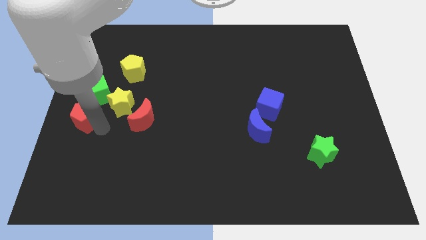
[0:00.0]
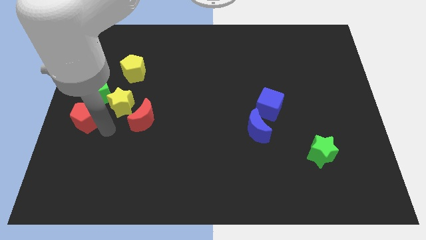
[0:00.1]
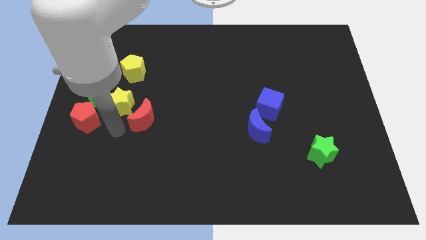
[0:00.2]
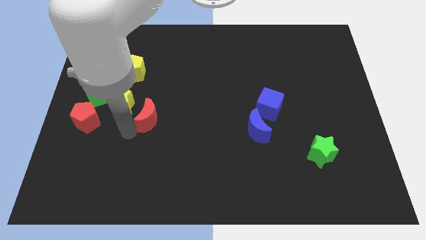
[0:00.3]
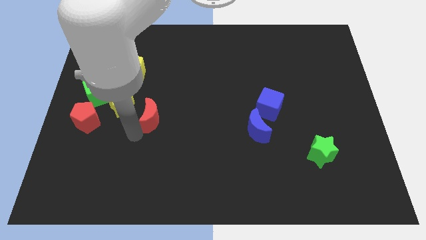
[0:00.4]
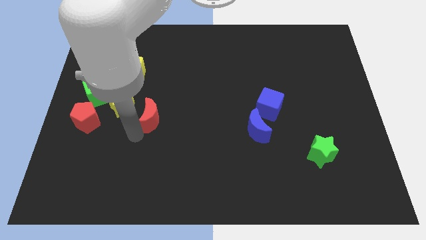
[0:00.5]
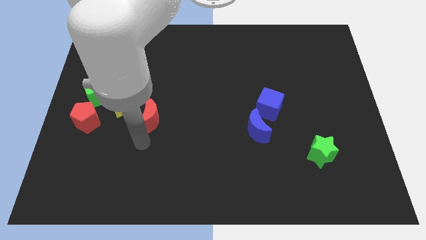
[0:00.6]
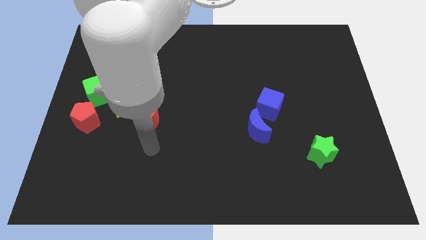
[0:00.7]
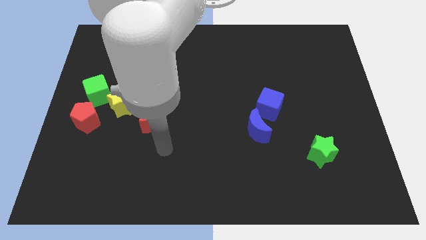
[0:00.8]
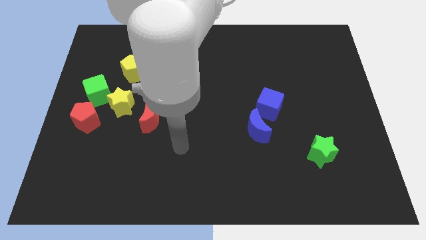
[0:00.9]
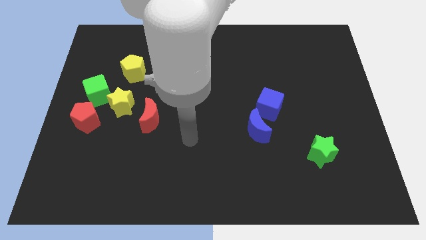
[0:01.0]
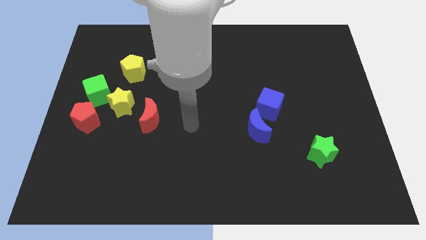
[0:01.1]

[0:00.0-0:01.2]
slightly push the red moon towards the center of the board

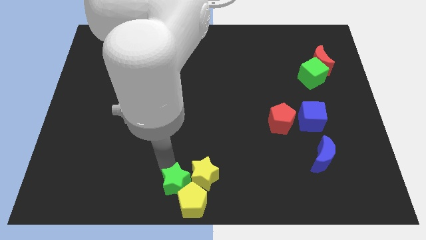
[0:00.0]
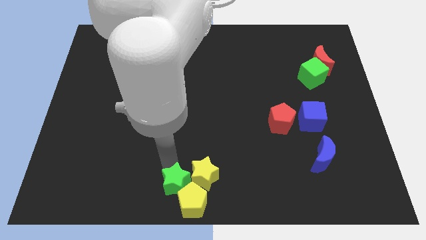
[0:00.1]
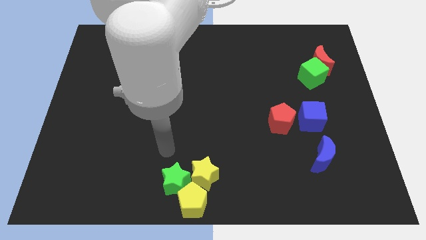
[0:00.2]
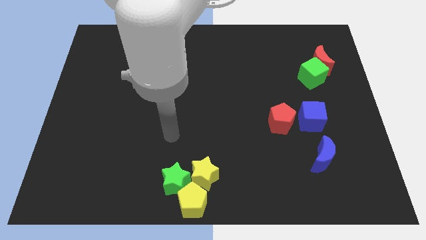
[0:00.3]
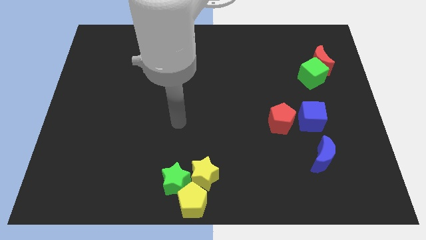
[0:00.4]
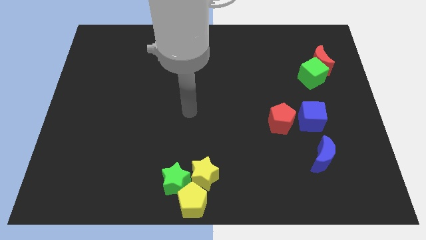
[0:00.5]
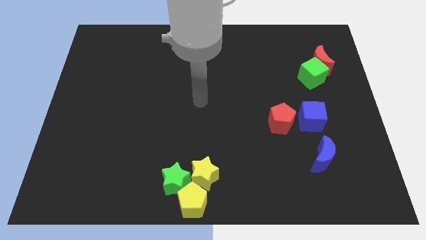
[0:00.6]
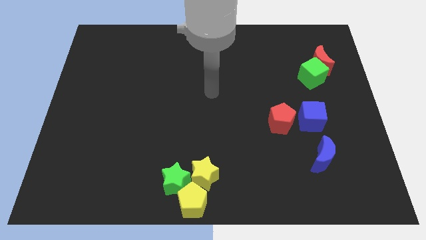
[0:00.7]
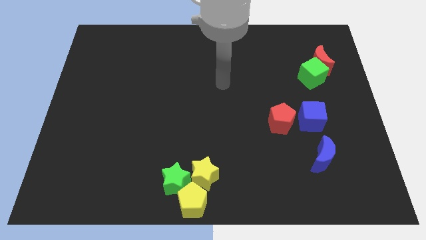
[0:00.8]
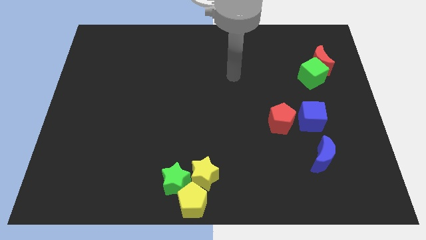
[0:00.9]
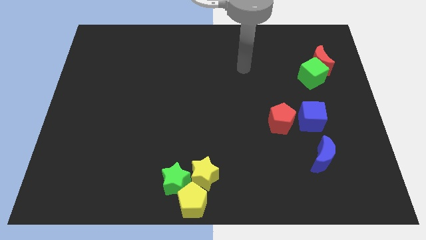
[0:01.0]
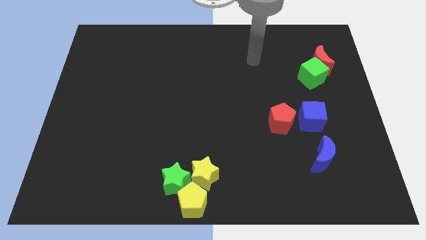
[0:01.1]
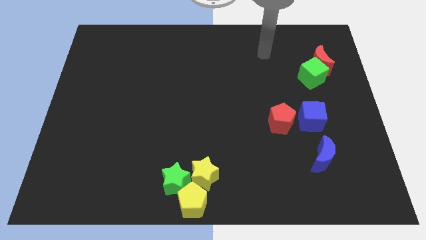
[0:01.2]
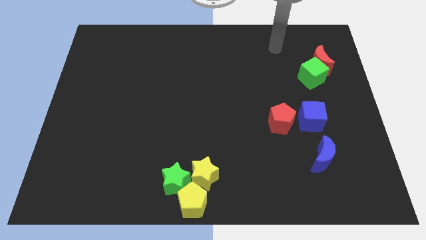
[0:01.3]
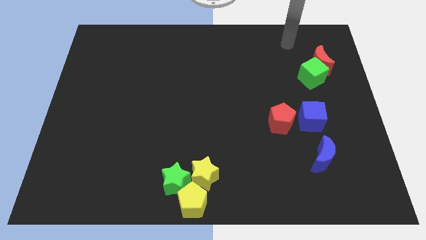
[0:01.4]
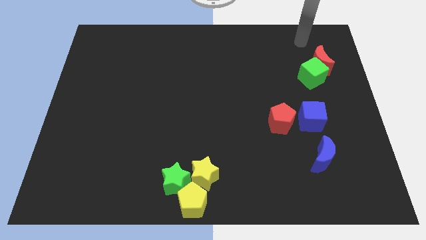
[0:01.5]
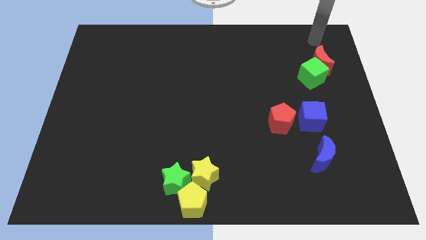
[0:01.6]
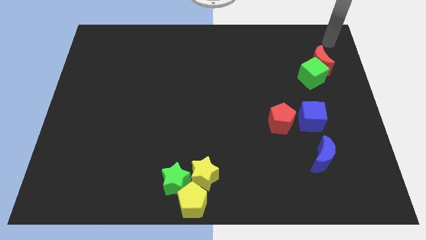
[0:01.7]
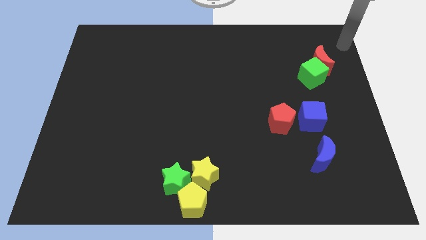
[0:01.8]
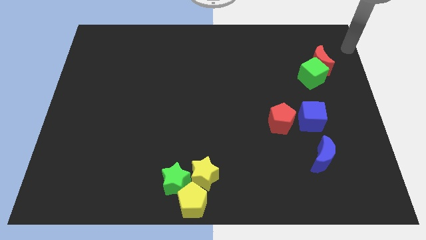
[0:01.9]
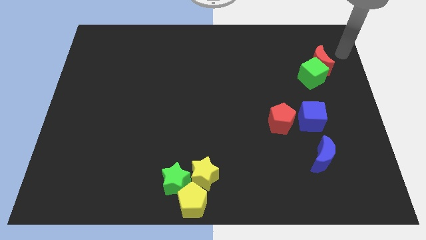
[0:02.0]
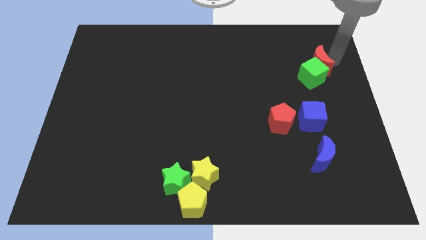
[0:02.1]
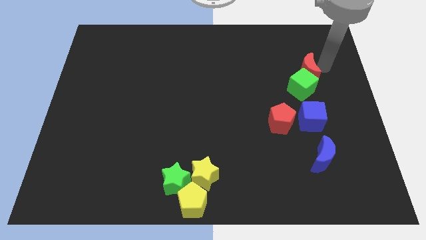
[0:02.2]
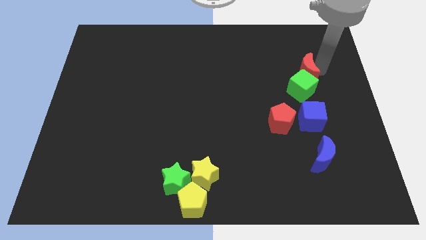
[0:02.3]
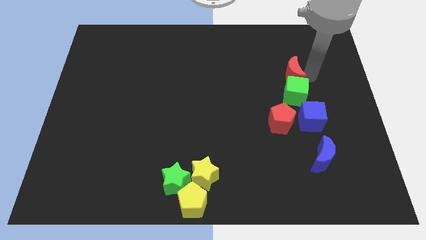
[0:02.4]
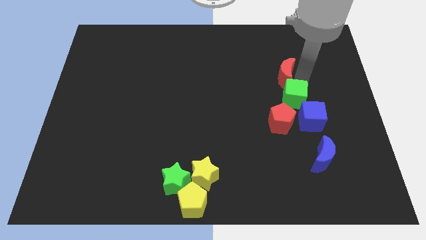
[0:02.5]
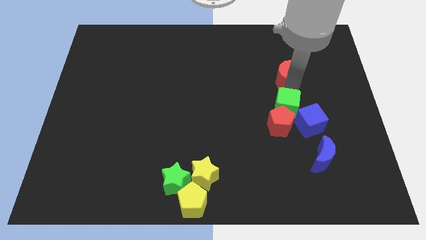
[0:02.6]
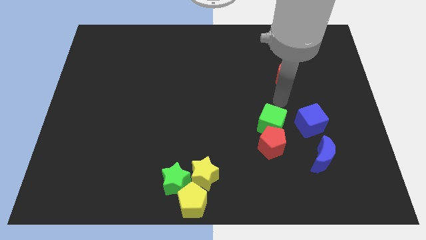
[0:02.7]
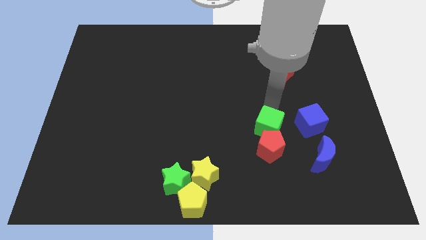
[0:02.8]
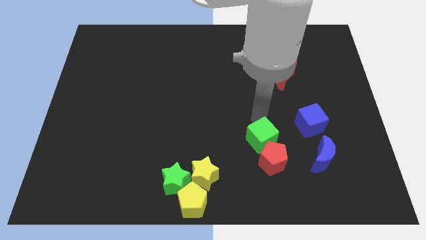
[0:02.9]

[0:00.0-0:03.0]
move the green cube along with the red pentagon to the bottom

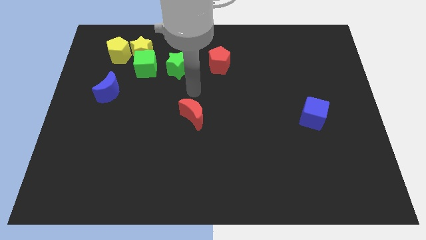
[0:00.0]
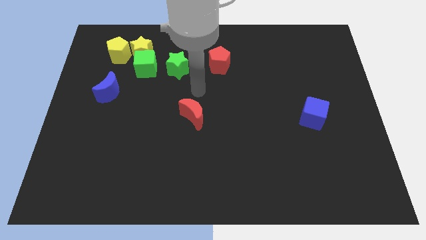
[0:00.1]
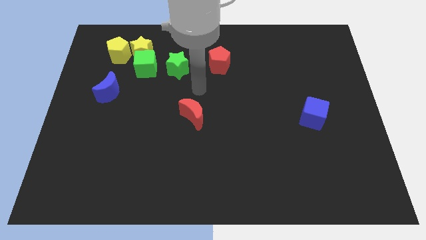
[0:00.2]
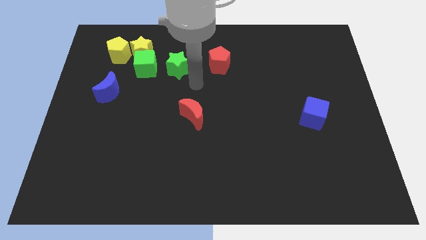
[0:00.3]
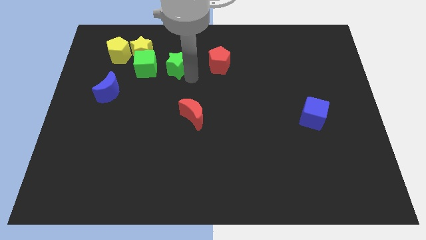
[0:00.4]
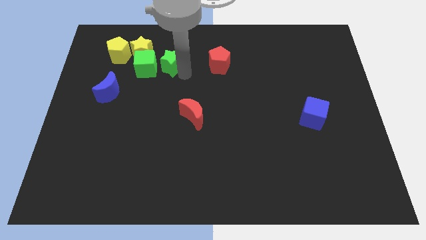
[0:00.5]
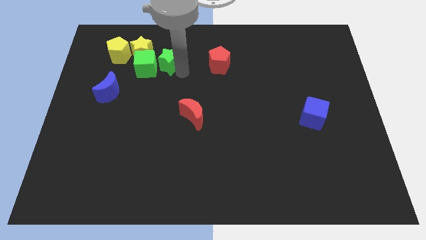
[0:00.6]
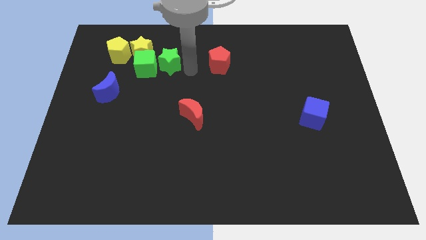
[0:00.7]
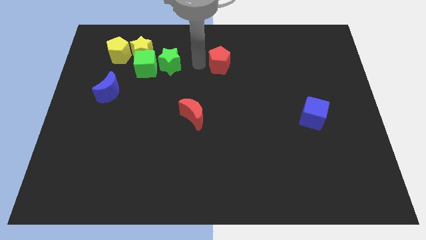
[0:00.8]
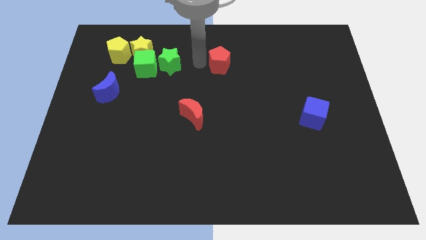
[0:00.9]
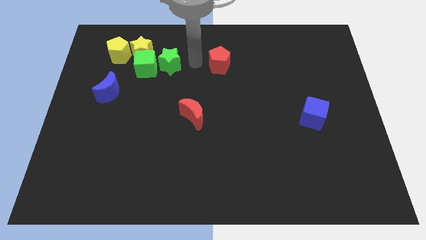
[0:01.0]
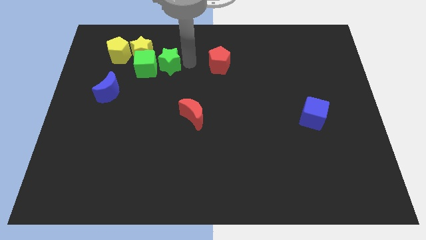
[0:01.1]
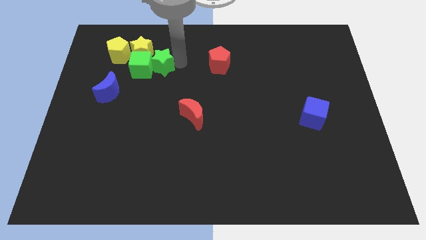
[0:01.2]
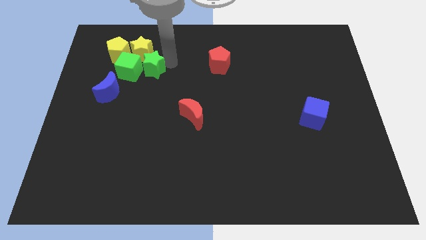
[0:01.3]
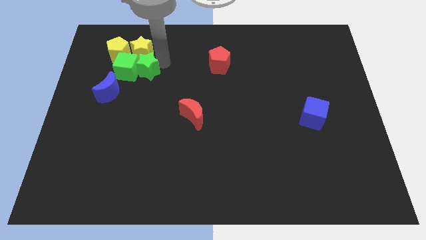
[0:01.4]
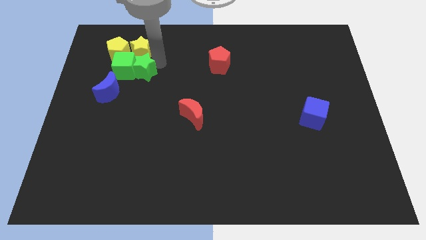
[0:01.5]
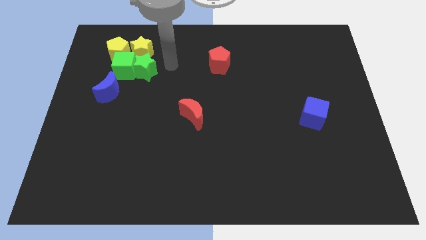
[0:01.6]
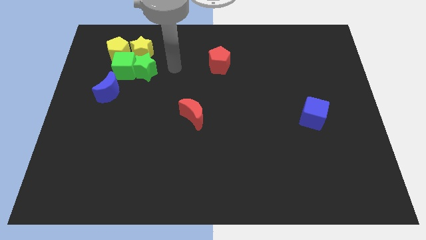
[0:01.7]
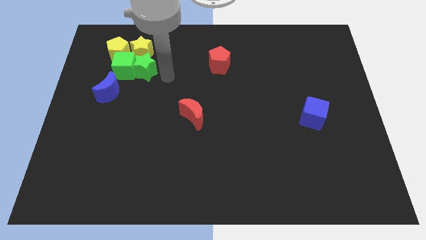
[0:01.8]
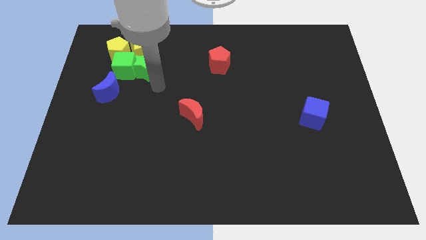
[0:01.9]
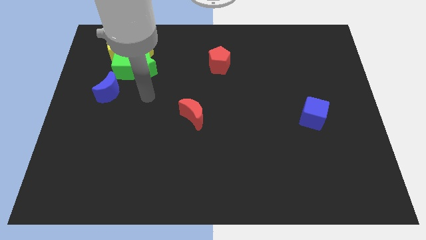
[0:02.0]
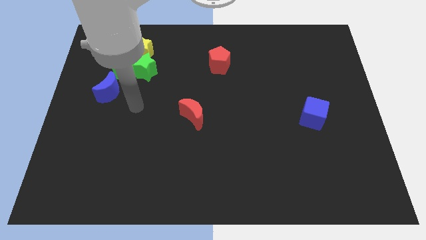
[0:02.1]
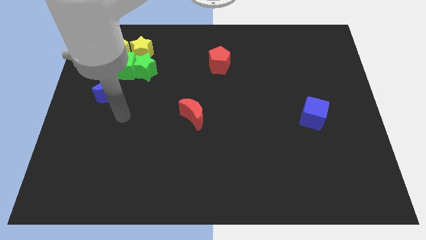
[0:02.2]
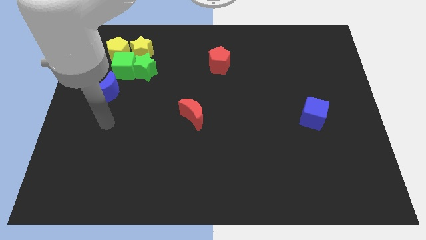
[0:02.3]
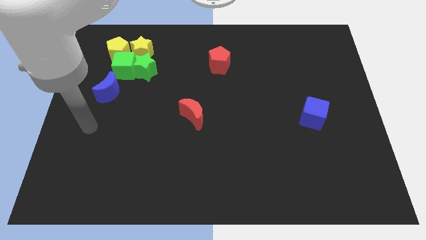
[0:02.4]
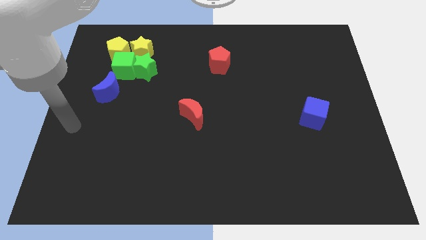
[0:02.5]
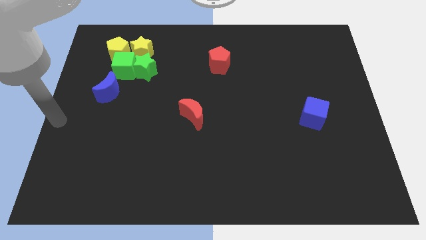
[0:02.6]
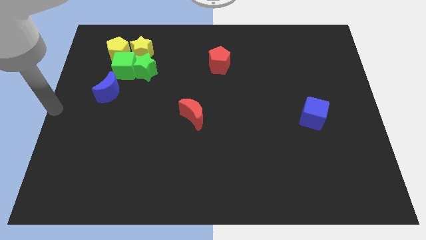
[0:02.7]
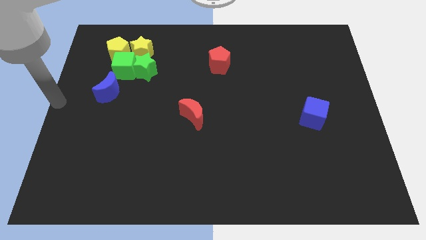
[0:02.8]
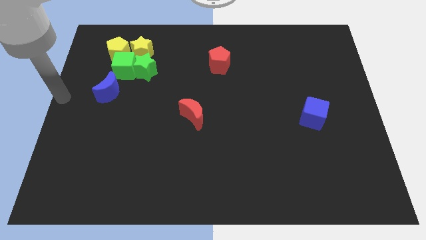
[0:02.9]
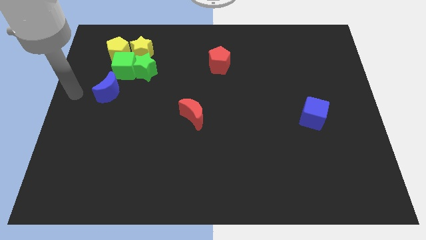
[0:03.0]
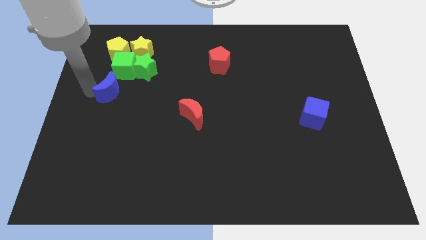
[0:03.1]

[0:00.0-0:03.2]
place the both the green blocks to the bottom side of both the yellow blocks

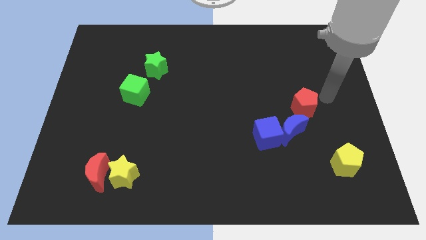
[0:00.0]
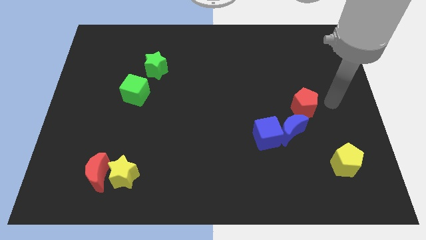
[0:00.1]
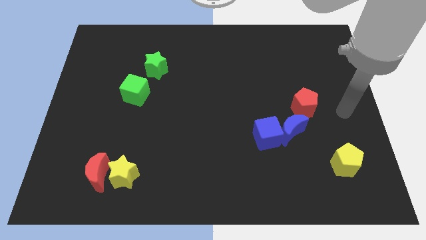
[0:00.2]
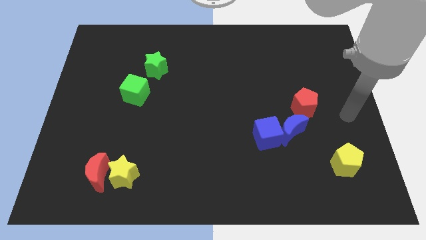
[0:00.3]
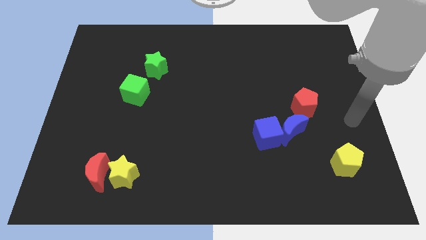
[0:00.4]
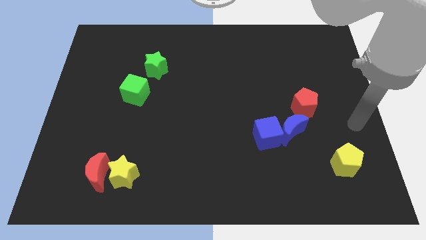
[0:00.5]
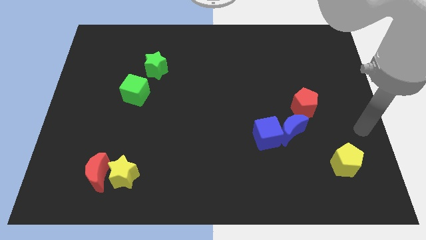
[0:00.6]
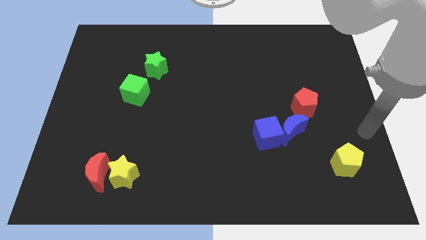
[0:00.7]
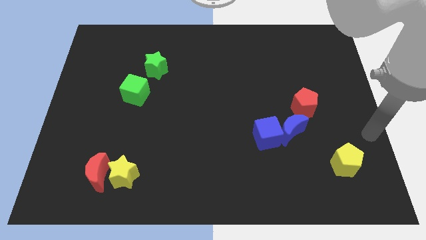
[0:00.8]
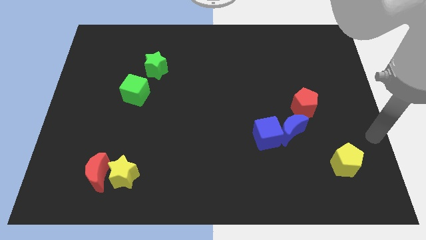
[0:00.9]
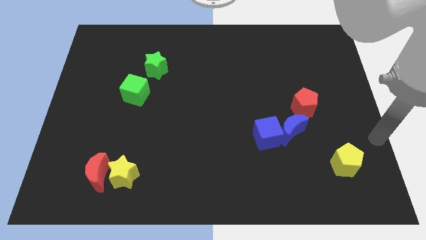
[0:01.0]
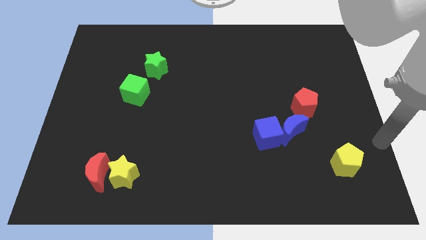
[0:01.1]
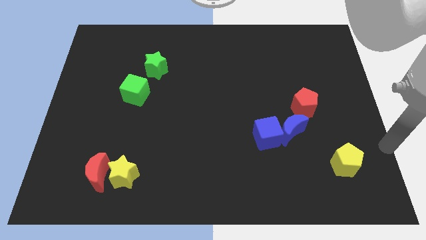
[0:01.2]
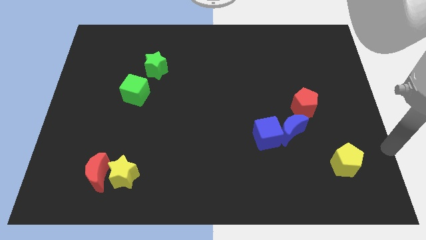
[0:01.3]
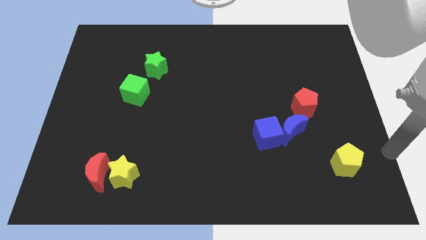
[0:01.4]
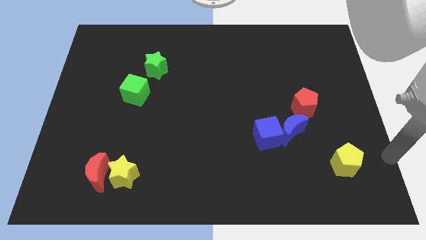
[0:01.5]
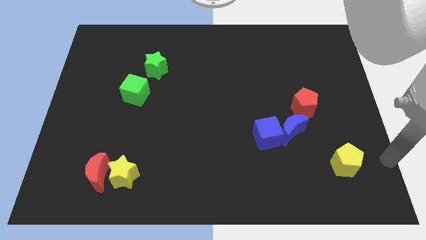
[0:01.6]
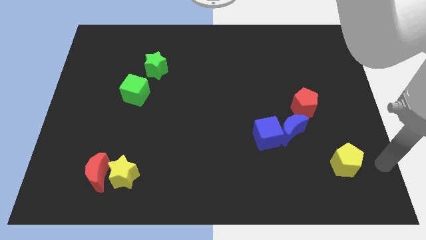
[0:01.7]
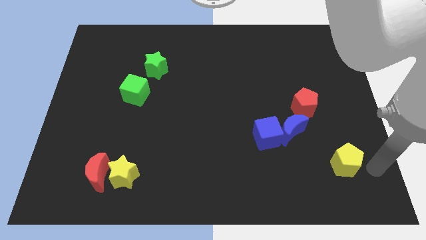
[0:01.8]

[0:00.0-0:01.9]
put your hand to the right of the yellow pentagon
